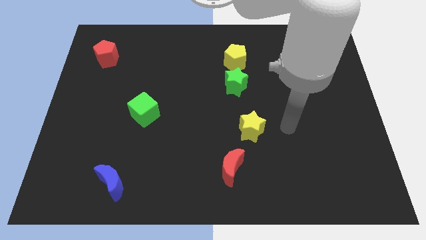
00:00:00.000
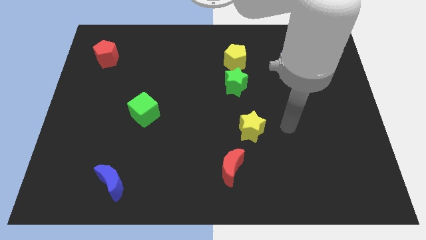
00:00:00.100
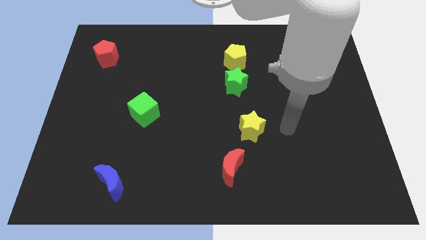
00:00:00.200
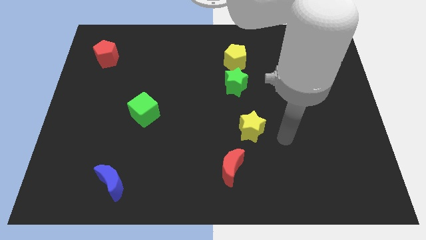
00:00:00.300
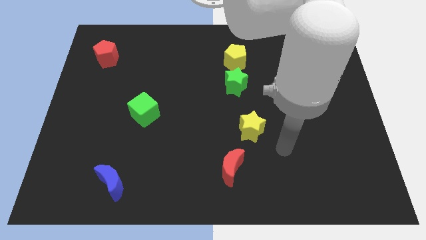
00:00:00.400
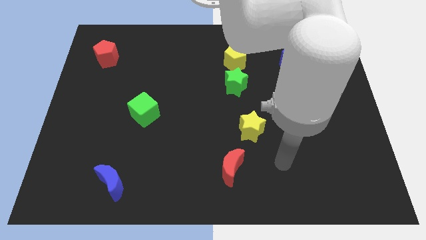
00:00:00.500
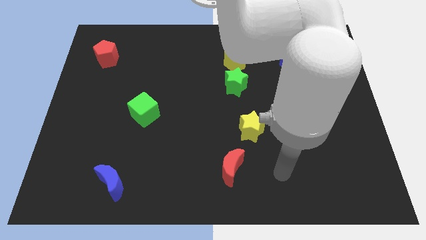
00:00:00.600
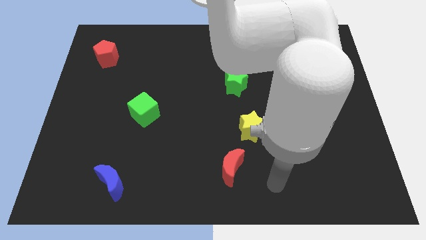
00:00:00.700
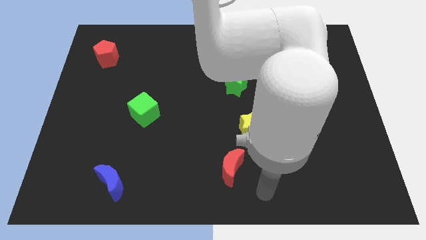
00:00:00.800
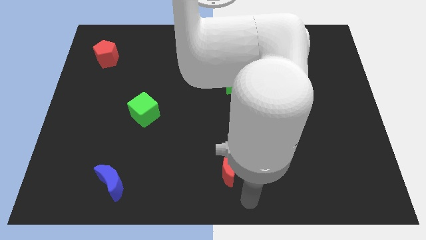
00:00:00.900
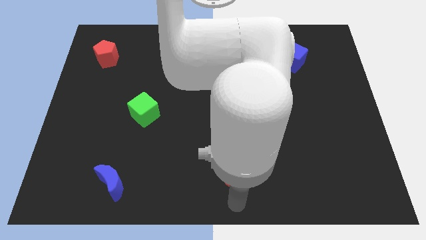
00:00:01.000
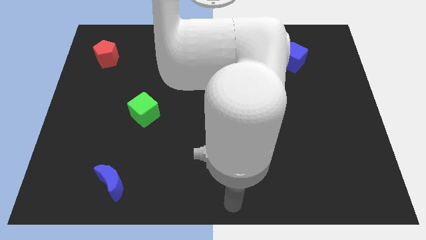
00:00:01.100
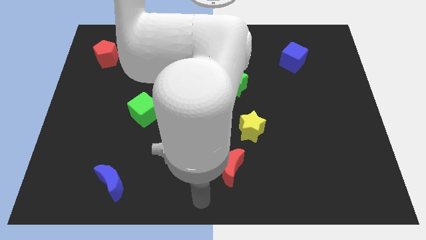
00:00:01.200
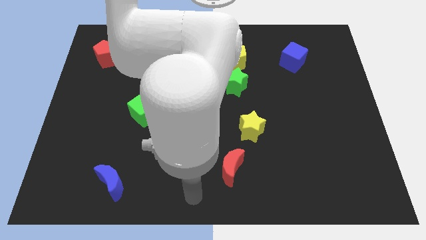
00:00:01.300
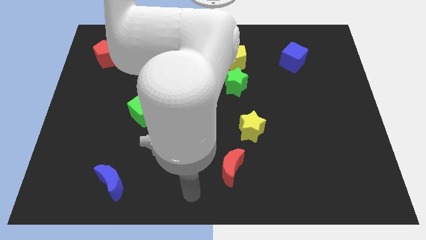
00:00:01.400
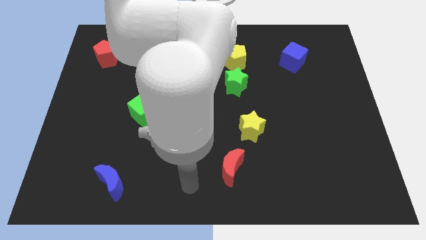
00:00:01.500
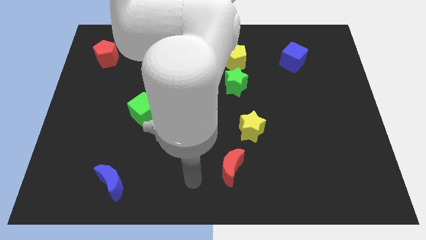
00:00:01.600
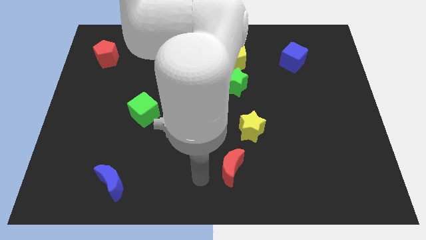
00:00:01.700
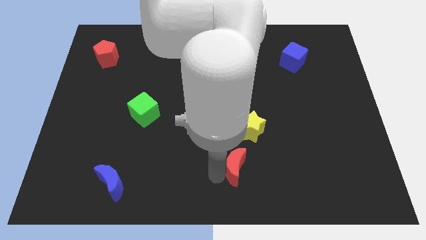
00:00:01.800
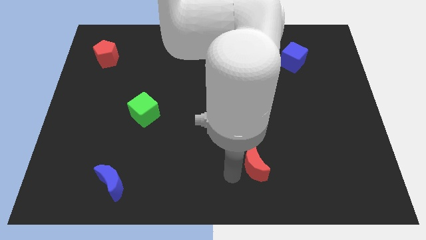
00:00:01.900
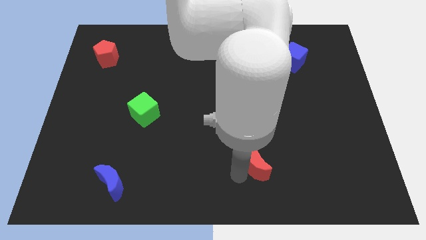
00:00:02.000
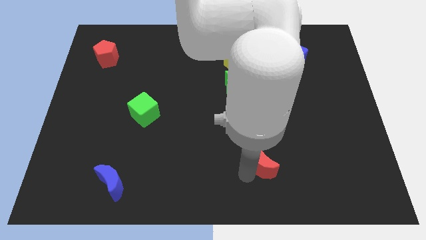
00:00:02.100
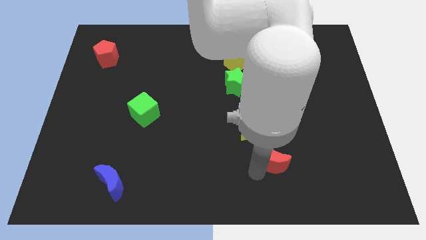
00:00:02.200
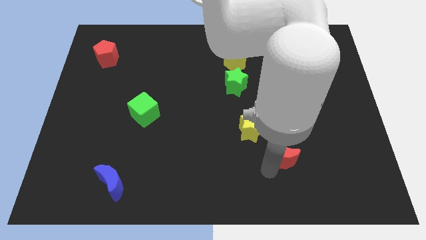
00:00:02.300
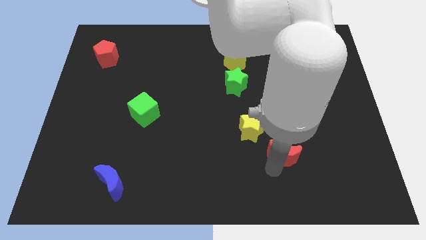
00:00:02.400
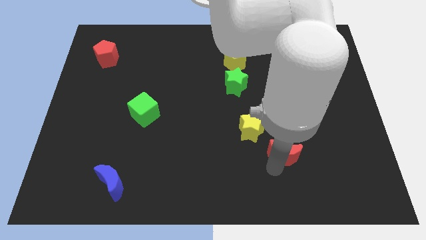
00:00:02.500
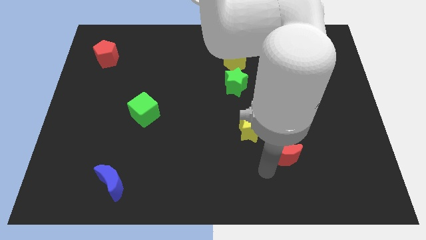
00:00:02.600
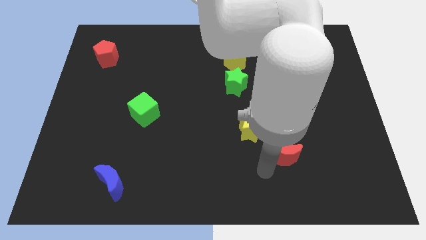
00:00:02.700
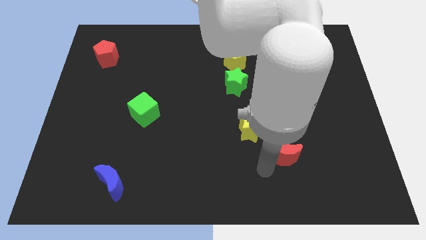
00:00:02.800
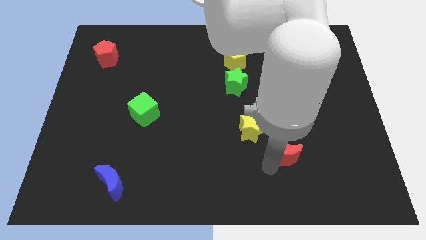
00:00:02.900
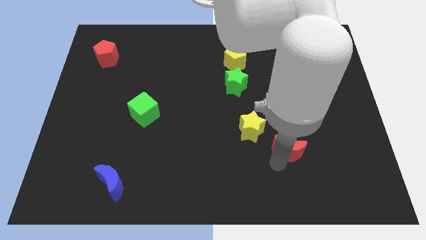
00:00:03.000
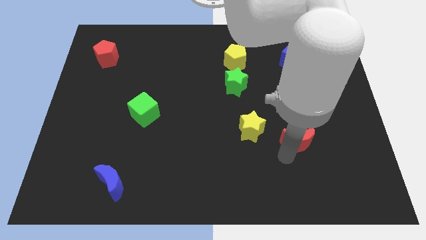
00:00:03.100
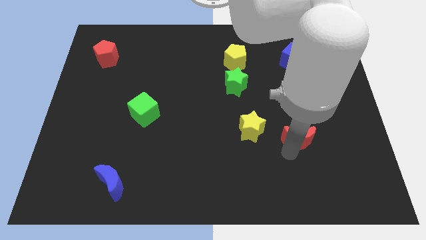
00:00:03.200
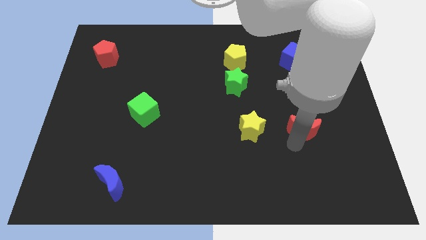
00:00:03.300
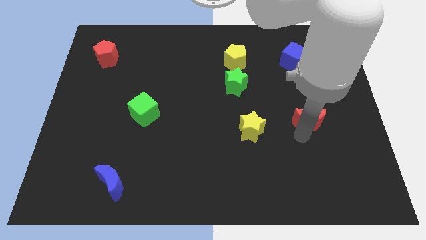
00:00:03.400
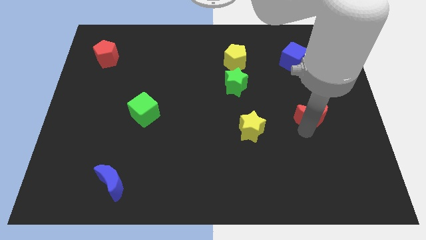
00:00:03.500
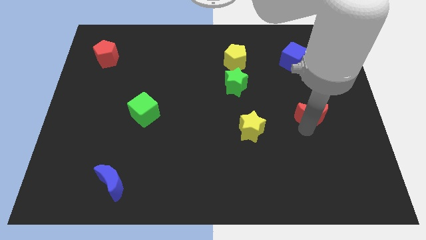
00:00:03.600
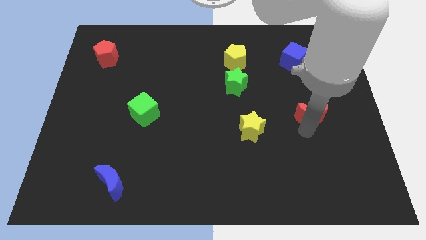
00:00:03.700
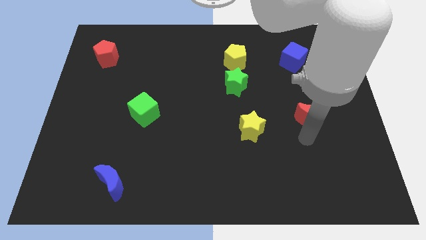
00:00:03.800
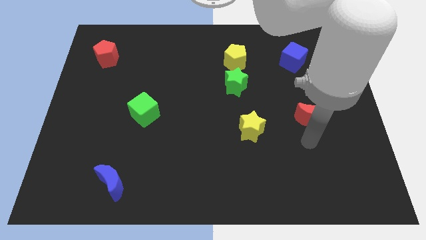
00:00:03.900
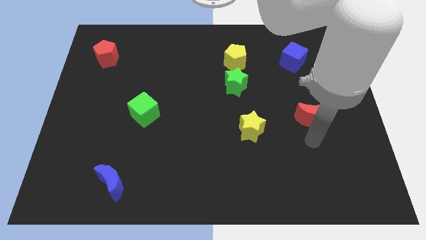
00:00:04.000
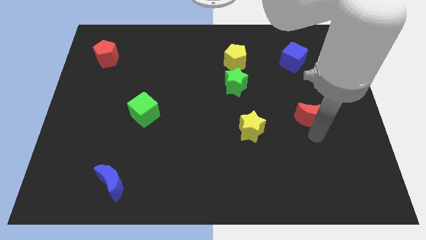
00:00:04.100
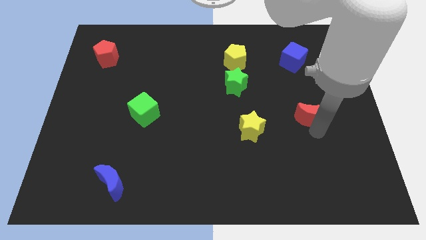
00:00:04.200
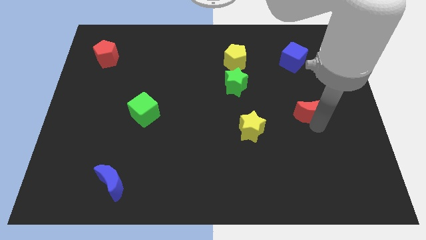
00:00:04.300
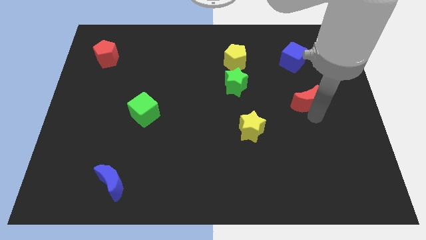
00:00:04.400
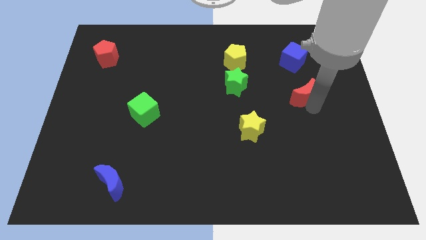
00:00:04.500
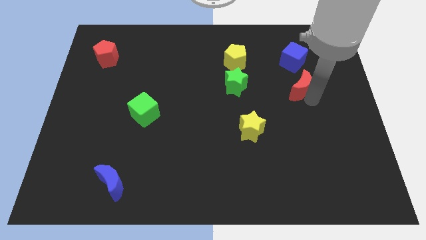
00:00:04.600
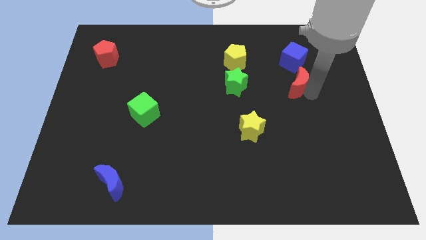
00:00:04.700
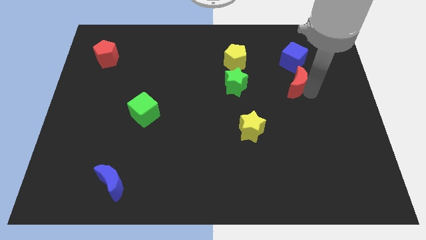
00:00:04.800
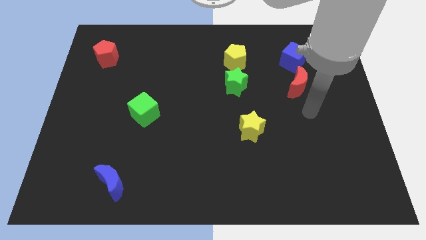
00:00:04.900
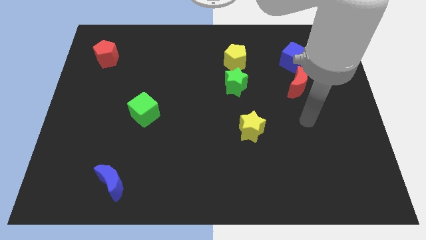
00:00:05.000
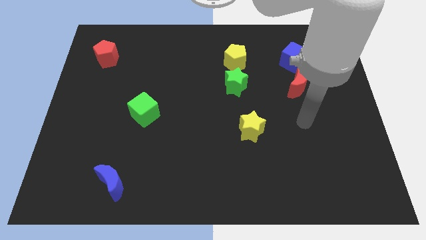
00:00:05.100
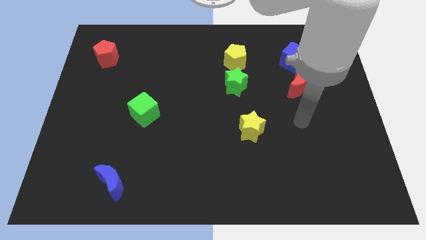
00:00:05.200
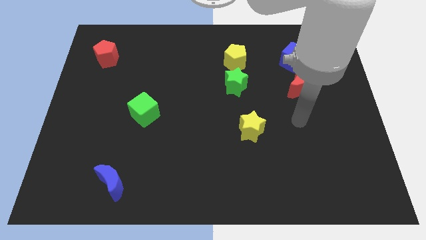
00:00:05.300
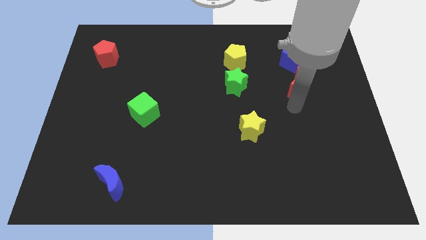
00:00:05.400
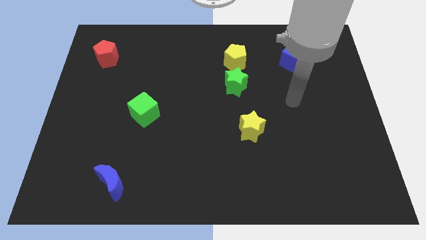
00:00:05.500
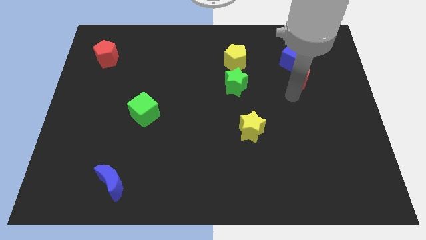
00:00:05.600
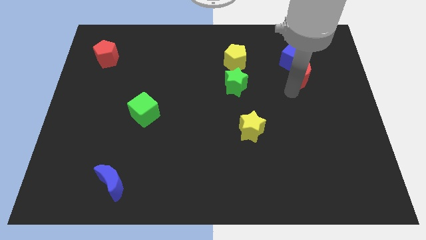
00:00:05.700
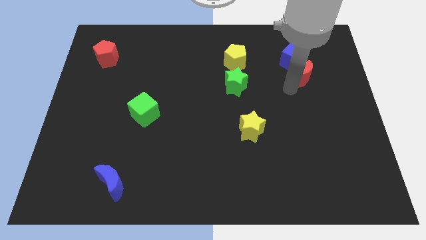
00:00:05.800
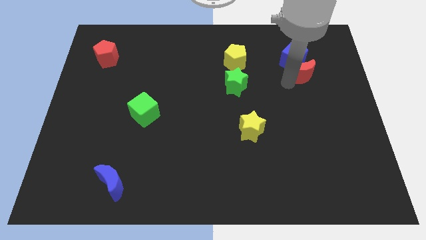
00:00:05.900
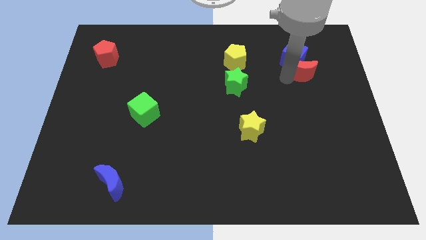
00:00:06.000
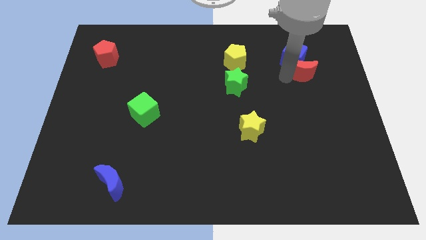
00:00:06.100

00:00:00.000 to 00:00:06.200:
push the red moon to the blue cube

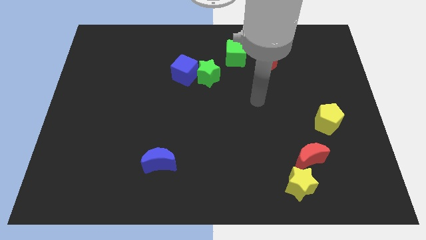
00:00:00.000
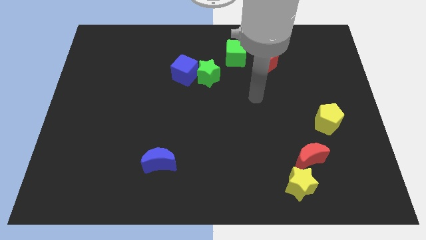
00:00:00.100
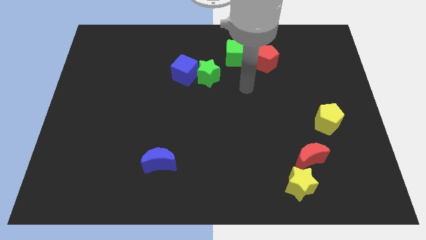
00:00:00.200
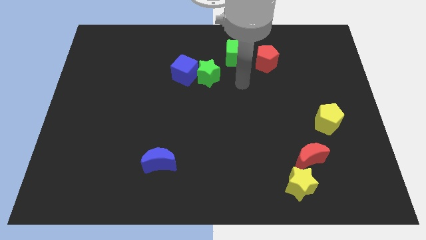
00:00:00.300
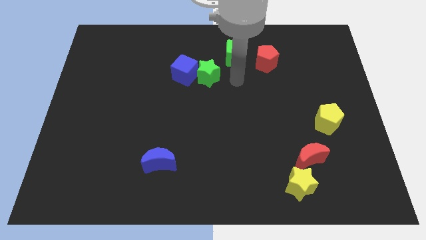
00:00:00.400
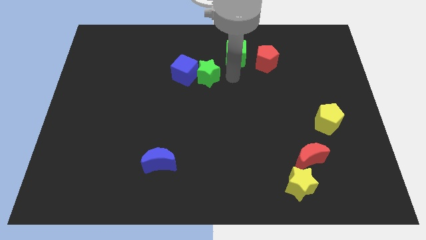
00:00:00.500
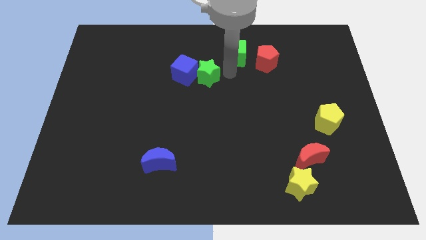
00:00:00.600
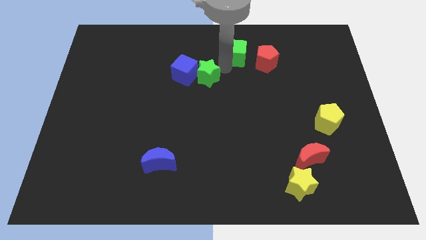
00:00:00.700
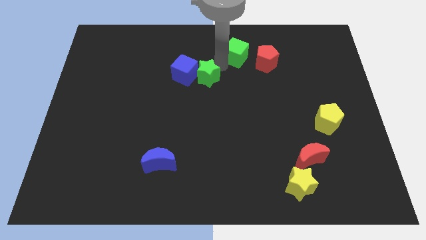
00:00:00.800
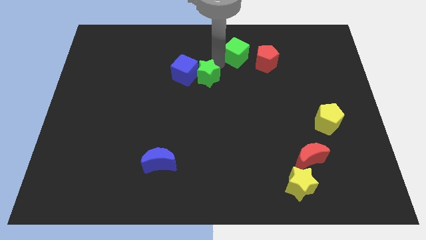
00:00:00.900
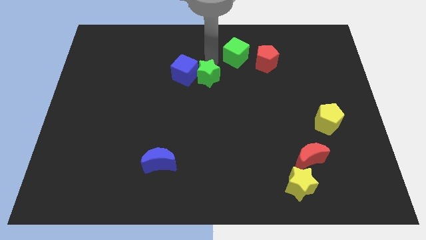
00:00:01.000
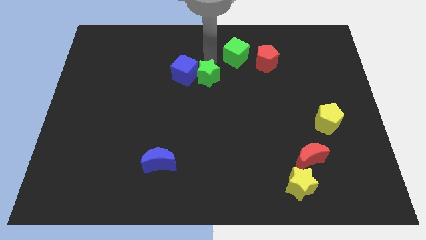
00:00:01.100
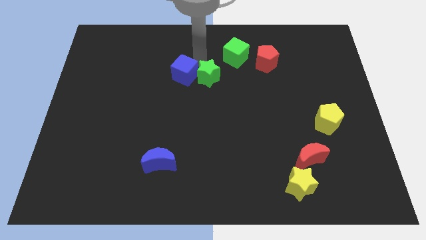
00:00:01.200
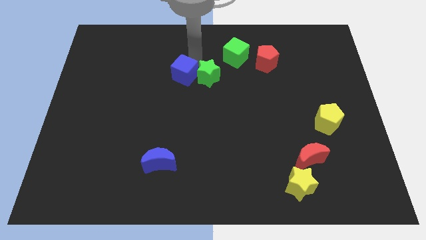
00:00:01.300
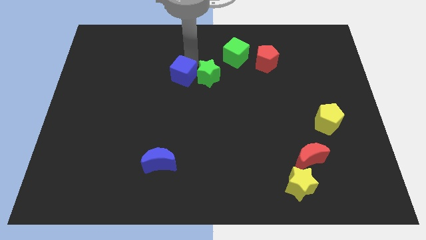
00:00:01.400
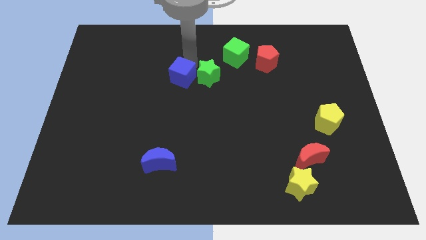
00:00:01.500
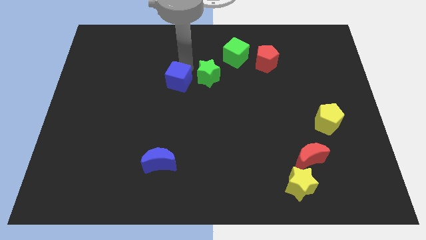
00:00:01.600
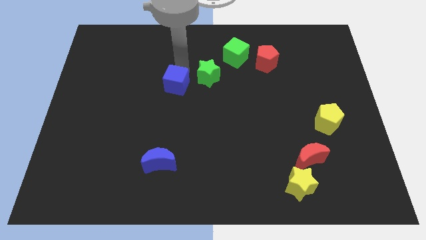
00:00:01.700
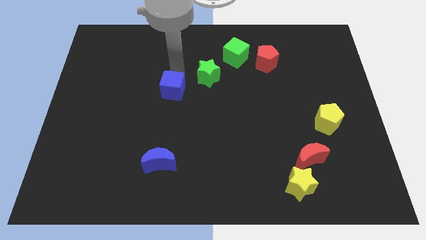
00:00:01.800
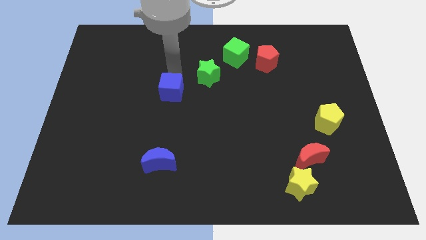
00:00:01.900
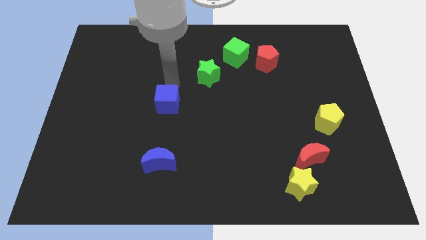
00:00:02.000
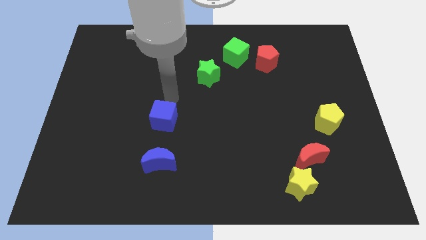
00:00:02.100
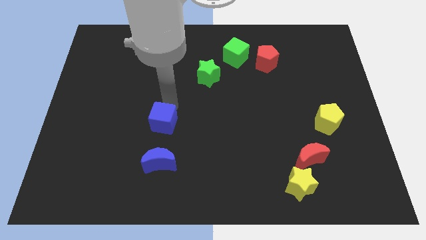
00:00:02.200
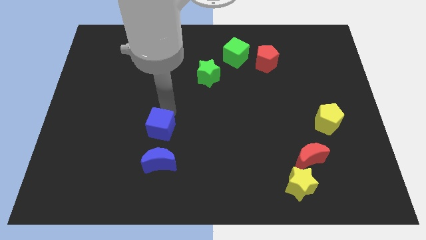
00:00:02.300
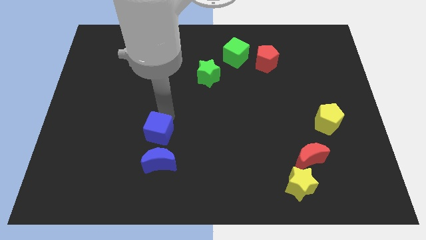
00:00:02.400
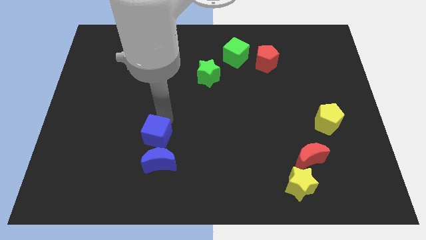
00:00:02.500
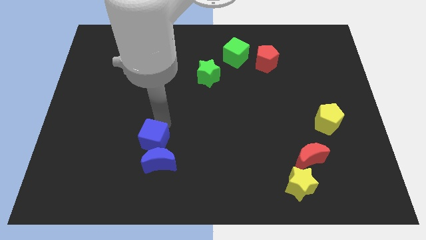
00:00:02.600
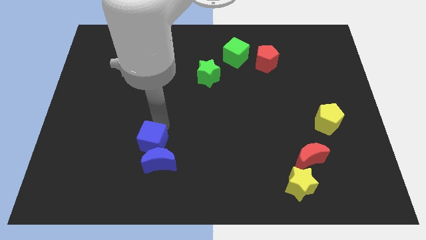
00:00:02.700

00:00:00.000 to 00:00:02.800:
put the blue cube next to the blue moon
